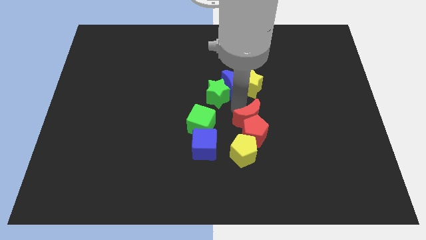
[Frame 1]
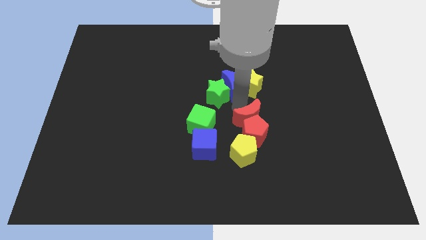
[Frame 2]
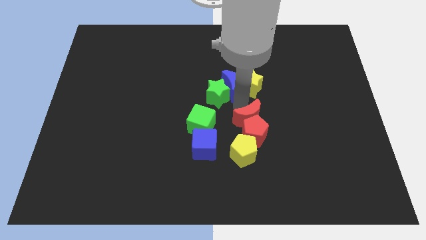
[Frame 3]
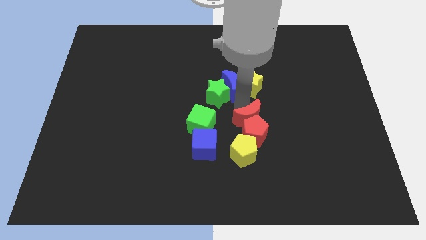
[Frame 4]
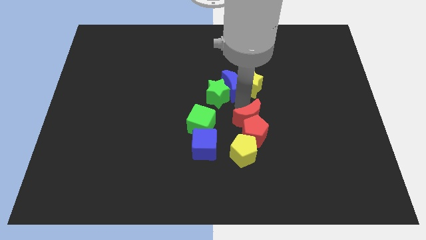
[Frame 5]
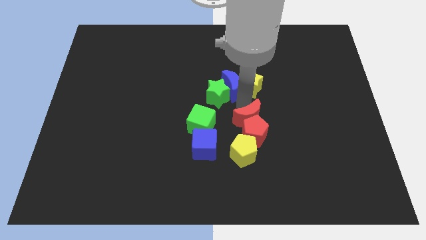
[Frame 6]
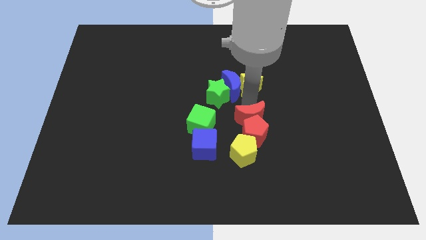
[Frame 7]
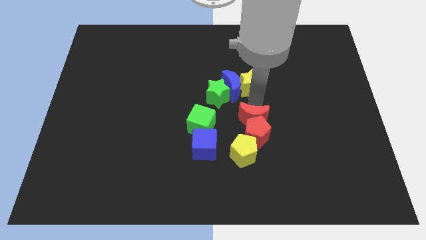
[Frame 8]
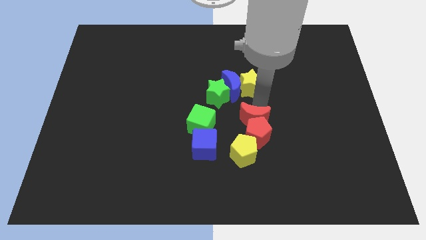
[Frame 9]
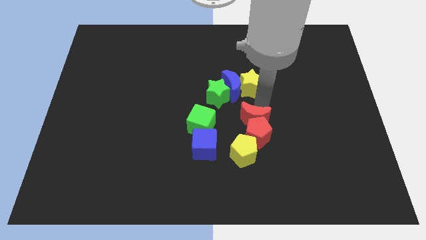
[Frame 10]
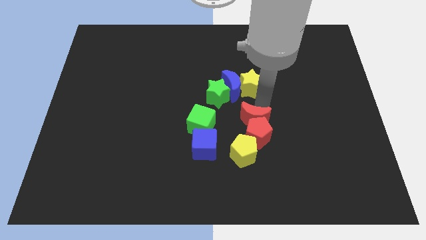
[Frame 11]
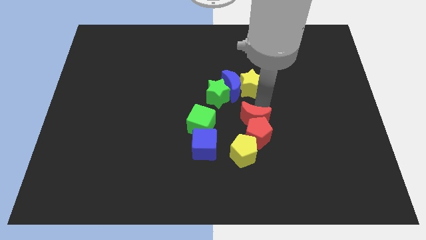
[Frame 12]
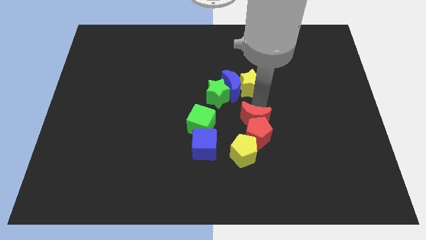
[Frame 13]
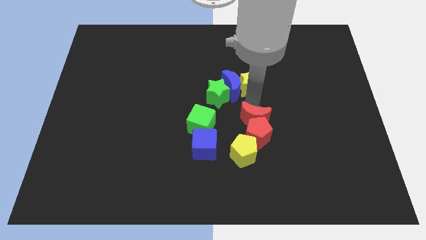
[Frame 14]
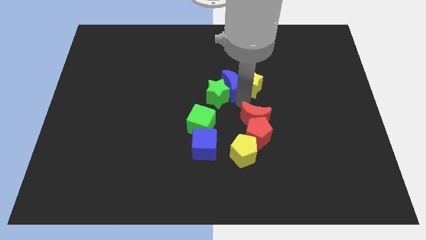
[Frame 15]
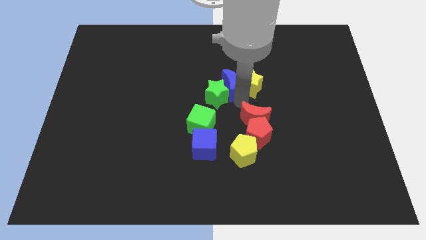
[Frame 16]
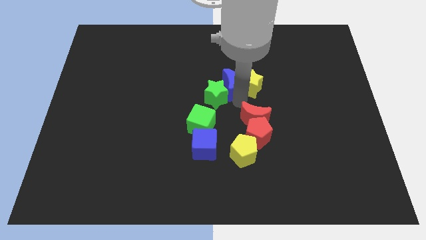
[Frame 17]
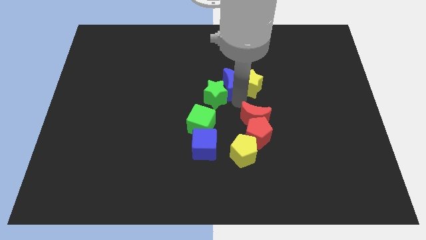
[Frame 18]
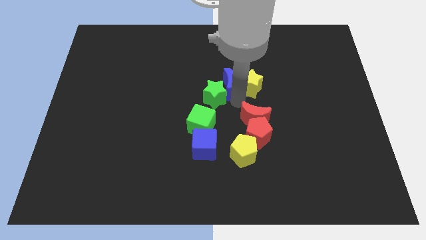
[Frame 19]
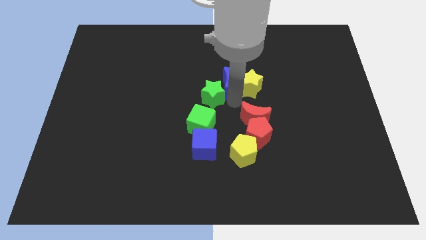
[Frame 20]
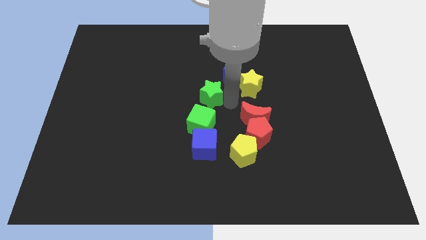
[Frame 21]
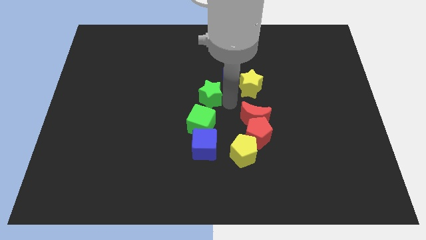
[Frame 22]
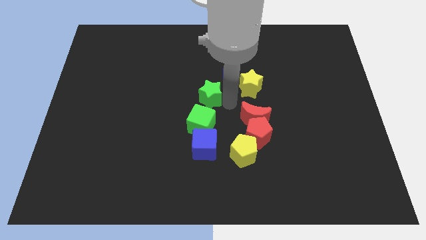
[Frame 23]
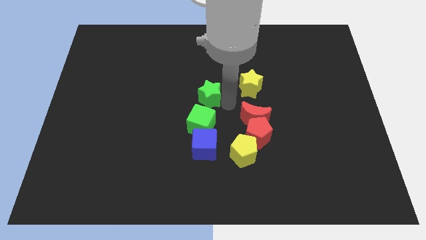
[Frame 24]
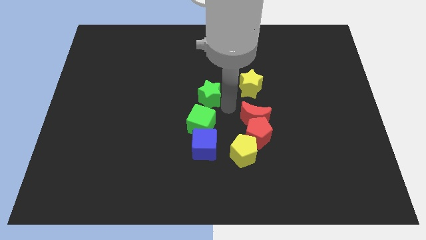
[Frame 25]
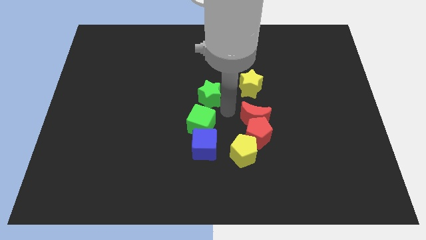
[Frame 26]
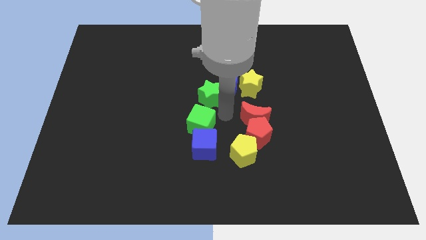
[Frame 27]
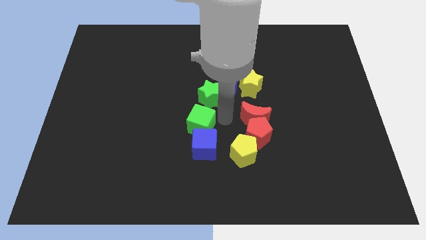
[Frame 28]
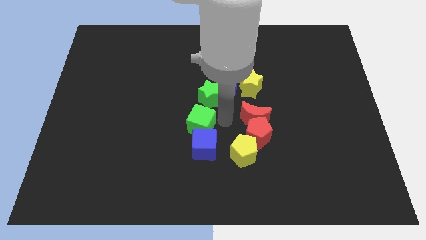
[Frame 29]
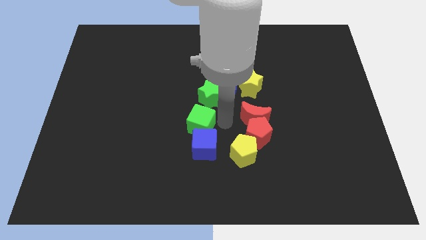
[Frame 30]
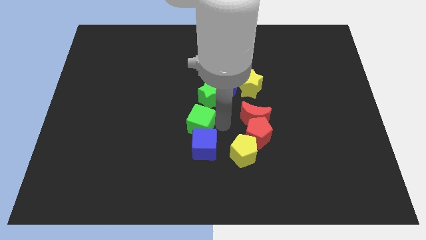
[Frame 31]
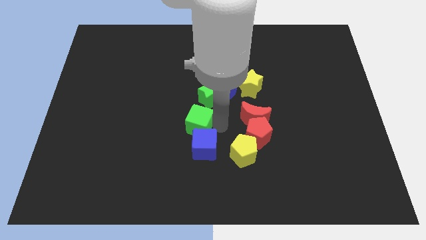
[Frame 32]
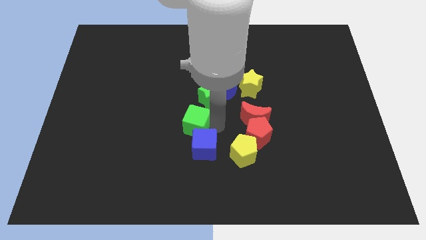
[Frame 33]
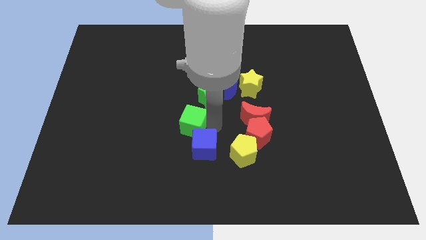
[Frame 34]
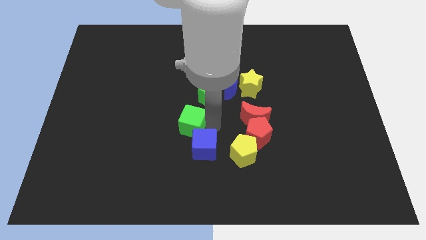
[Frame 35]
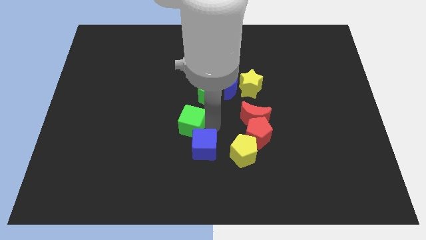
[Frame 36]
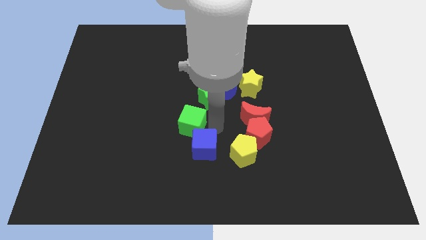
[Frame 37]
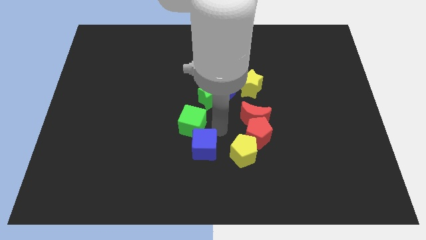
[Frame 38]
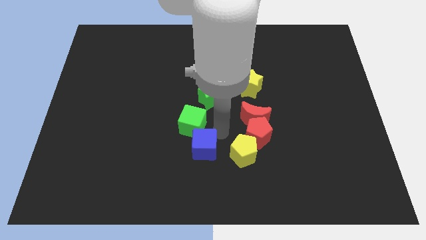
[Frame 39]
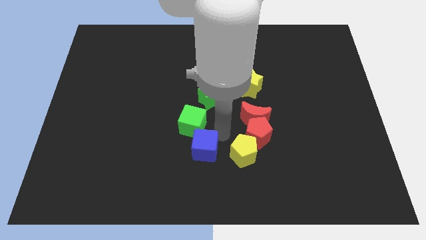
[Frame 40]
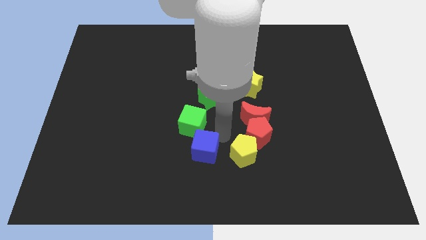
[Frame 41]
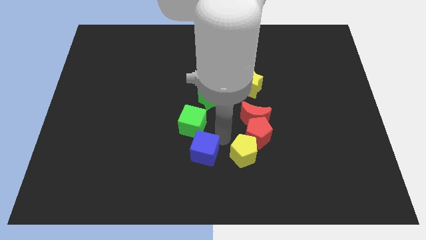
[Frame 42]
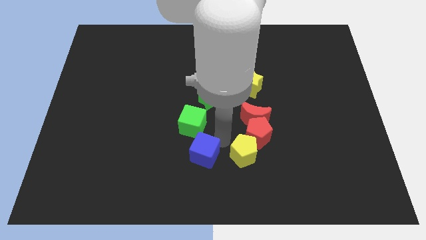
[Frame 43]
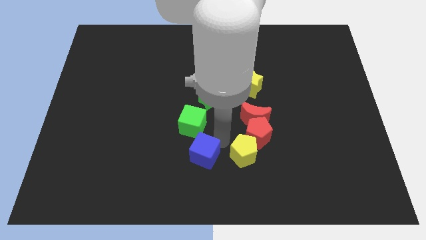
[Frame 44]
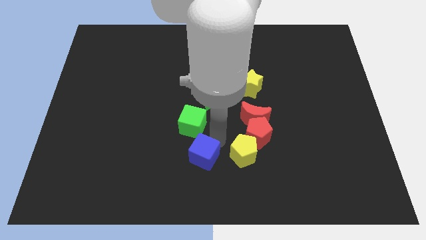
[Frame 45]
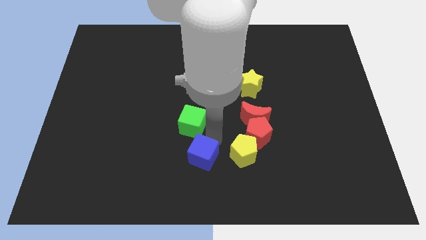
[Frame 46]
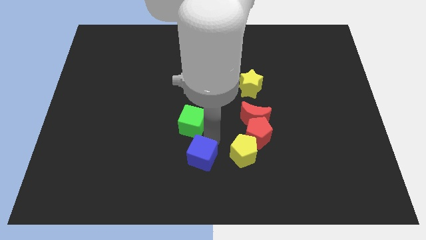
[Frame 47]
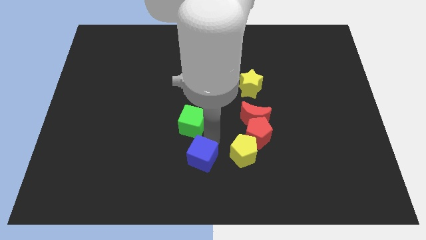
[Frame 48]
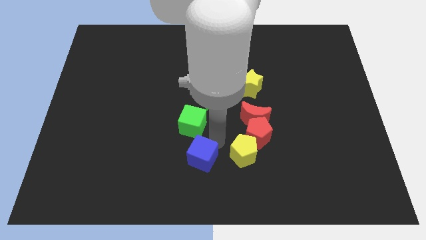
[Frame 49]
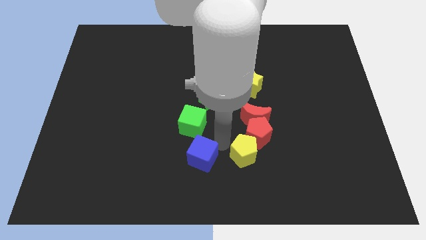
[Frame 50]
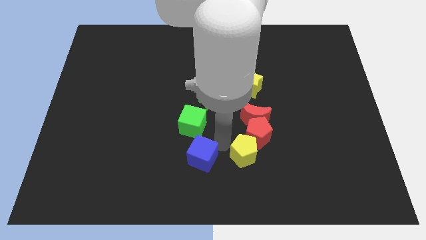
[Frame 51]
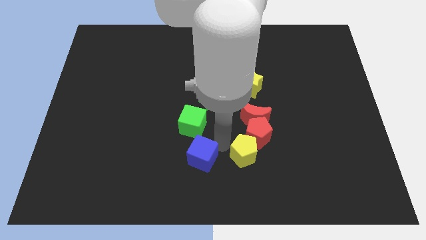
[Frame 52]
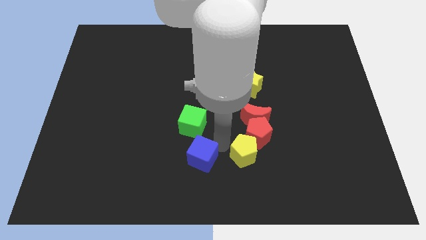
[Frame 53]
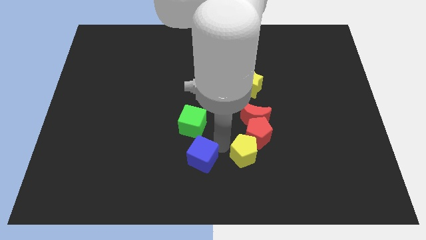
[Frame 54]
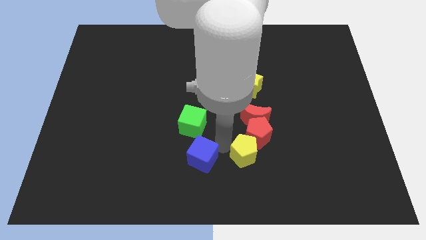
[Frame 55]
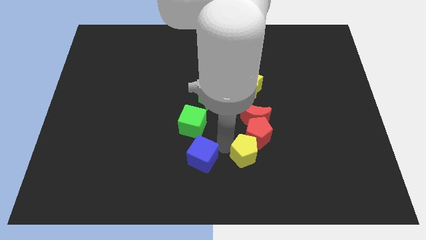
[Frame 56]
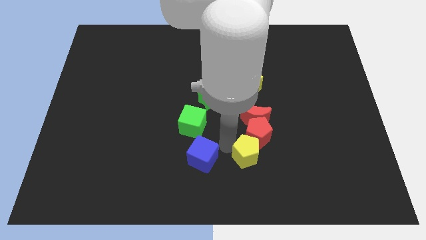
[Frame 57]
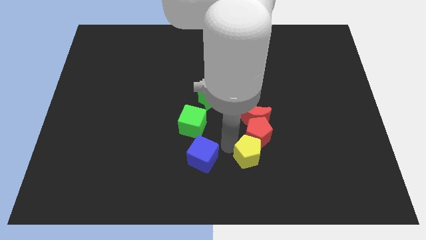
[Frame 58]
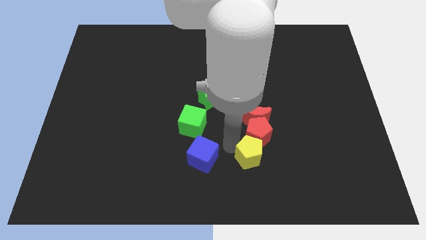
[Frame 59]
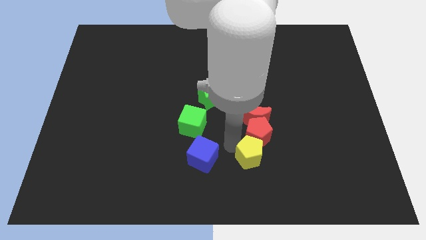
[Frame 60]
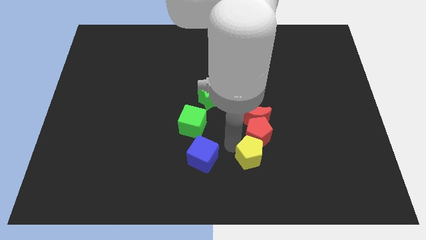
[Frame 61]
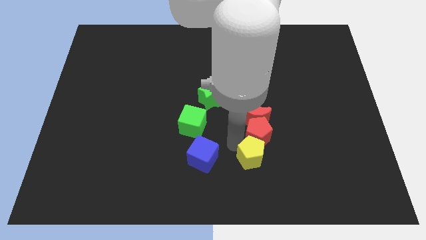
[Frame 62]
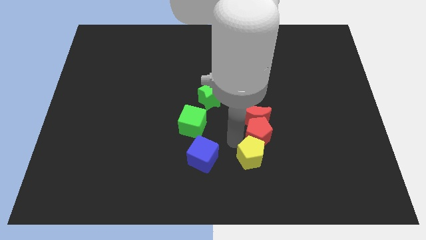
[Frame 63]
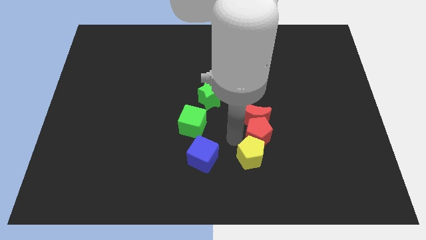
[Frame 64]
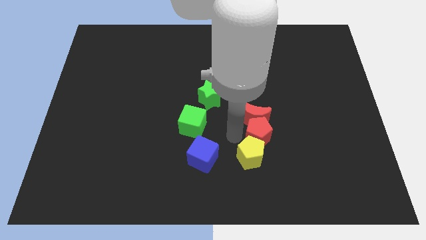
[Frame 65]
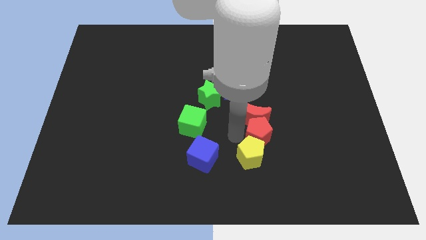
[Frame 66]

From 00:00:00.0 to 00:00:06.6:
touch the top blocks red moon blue moons green star and green cube blue cube and yellow pentagon

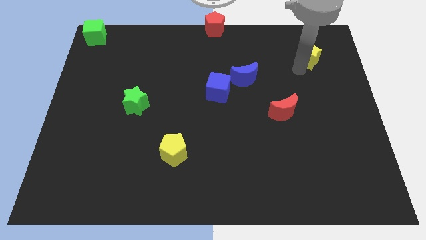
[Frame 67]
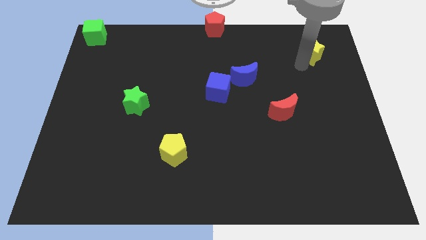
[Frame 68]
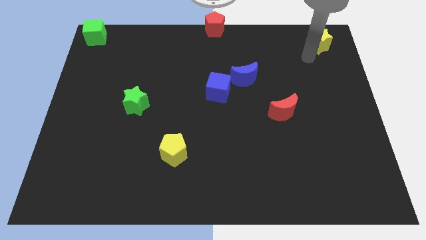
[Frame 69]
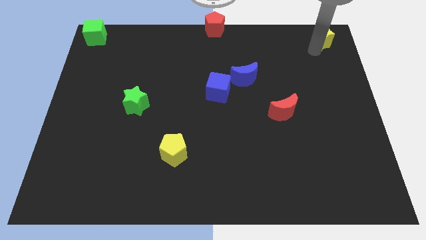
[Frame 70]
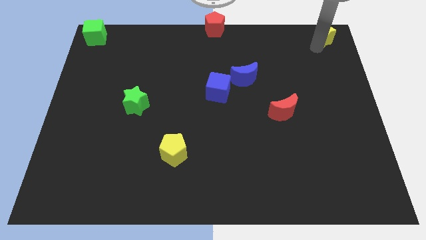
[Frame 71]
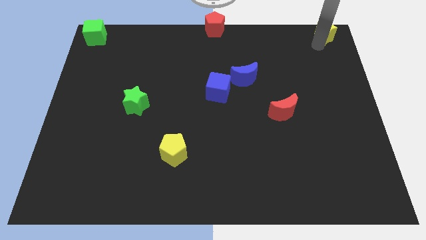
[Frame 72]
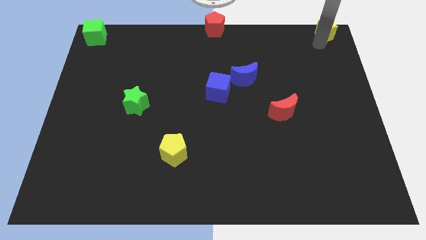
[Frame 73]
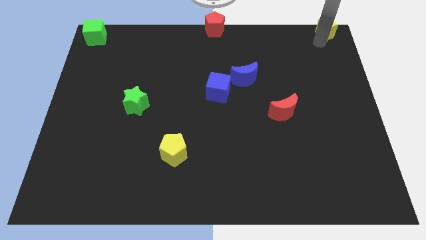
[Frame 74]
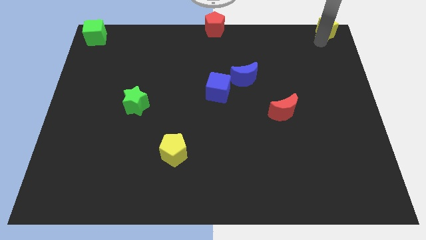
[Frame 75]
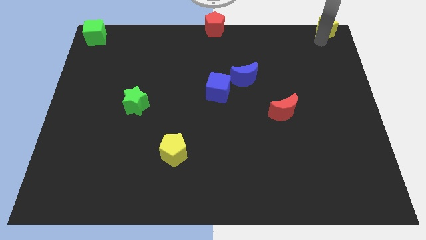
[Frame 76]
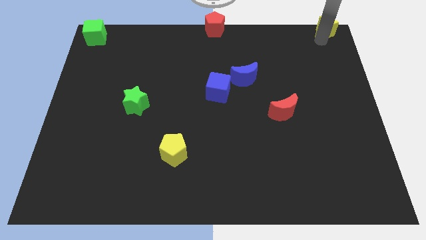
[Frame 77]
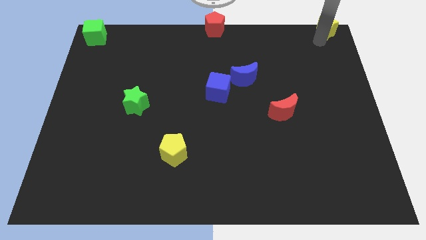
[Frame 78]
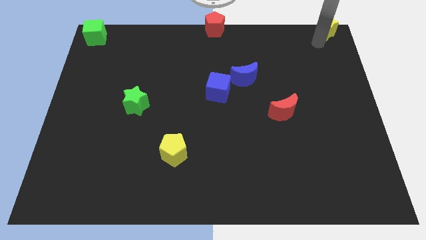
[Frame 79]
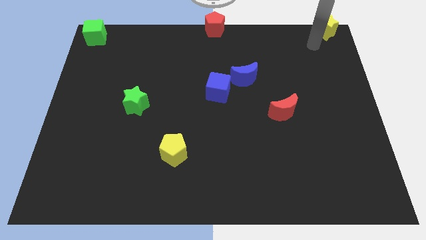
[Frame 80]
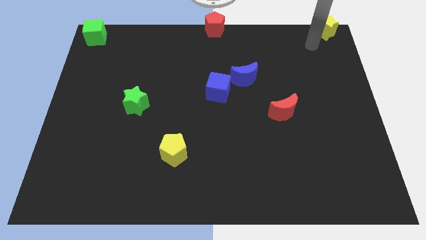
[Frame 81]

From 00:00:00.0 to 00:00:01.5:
push the yellow star to the top right

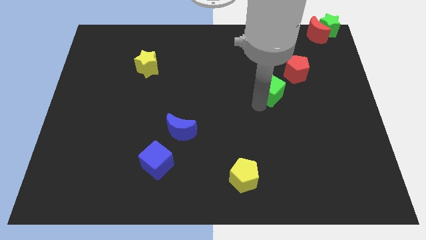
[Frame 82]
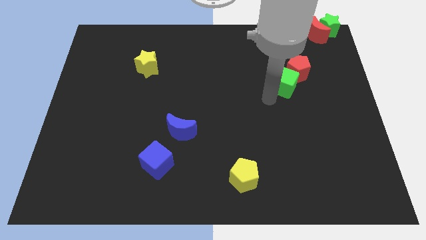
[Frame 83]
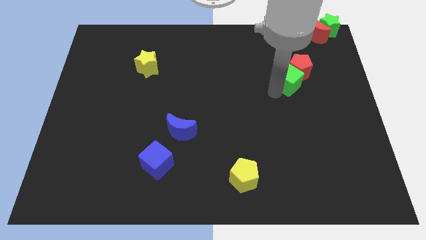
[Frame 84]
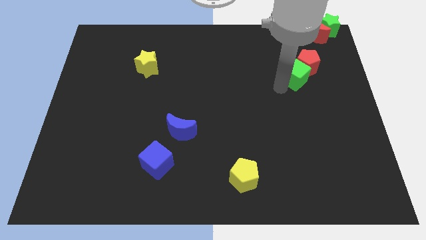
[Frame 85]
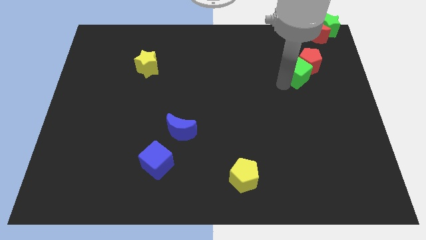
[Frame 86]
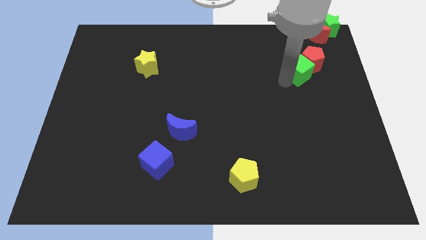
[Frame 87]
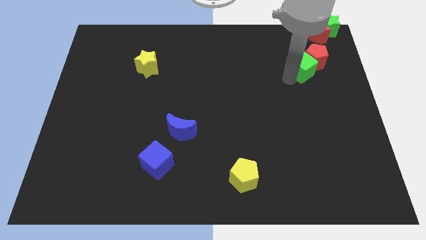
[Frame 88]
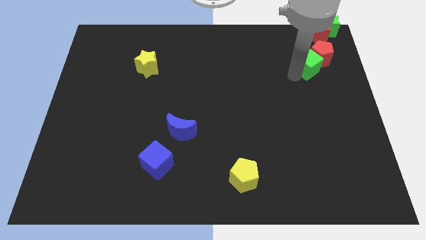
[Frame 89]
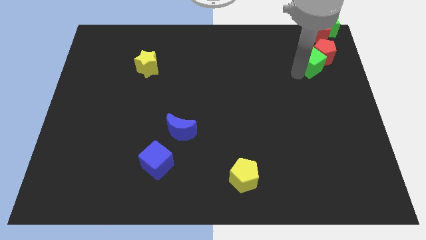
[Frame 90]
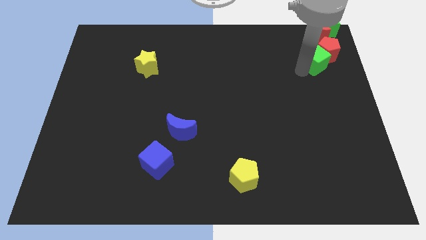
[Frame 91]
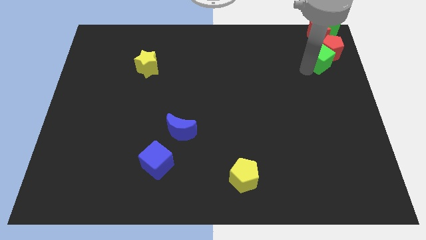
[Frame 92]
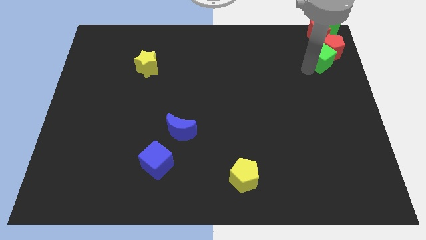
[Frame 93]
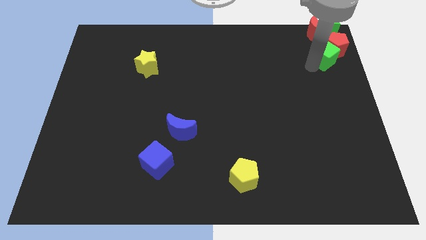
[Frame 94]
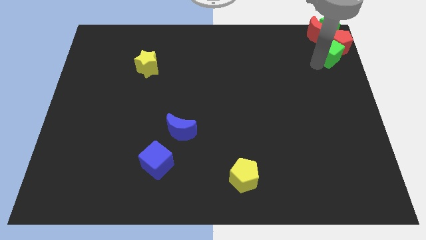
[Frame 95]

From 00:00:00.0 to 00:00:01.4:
slide the red pentagon and the green cube to the top right corner of the board
